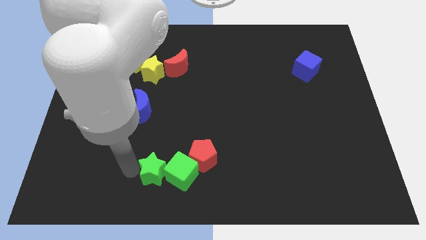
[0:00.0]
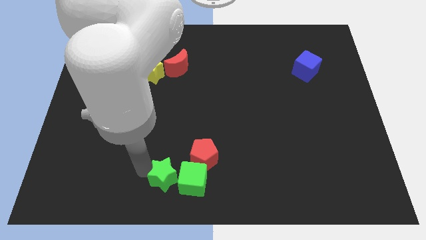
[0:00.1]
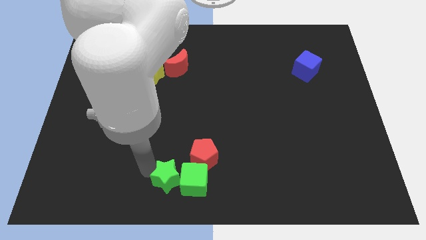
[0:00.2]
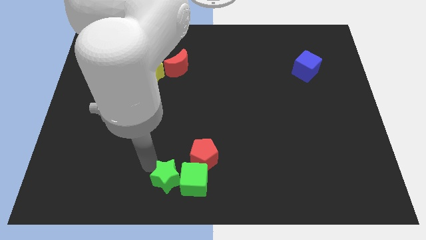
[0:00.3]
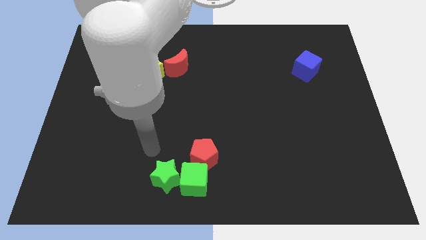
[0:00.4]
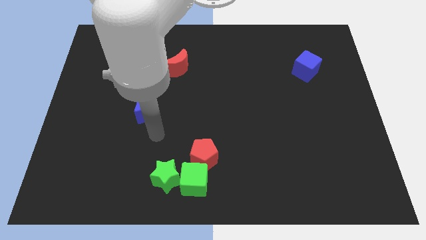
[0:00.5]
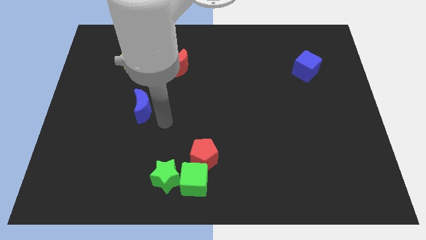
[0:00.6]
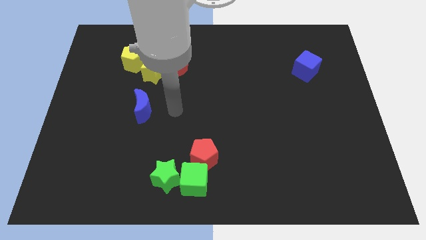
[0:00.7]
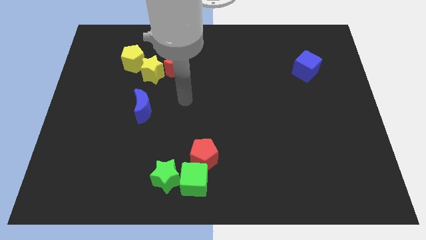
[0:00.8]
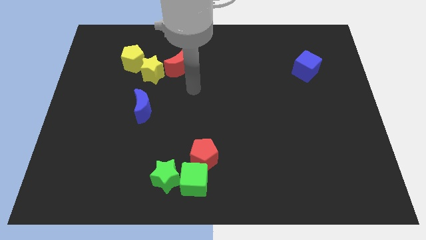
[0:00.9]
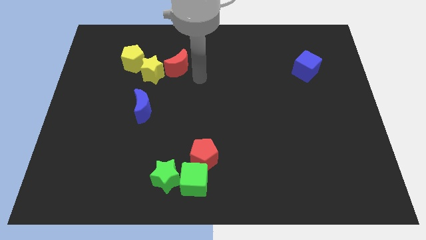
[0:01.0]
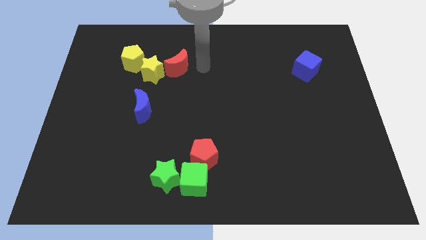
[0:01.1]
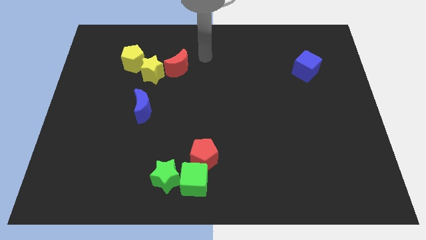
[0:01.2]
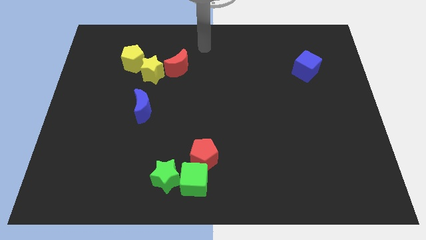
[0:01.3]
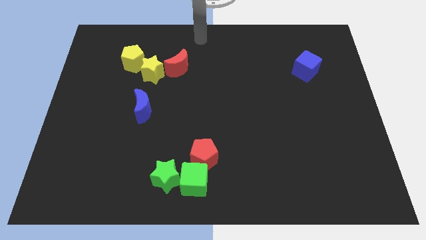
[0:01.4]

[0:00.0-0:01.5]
move the green blocks slightly to the right

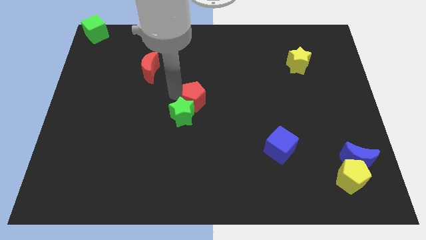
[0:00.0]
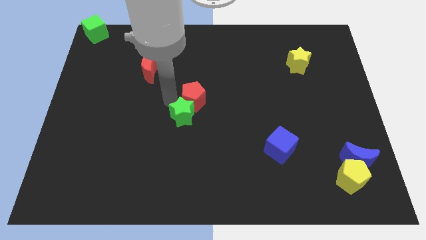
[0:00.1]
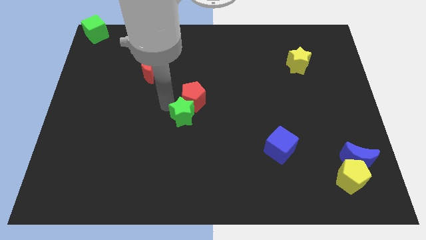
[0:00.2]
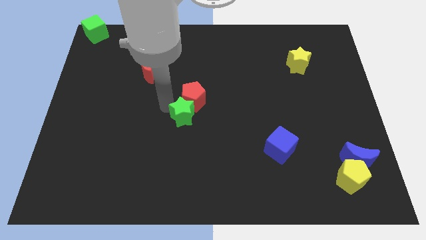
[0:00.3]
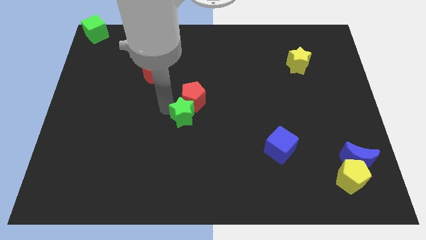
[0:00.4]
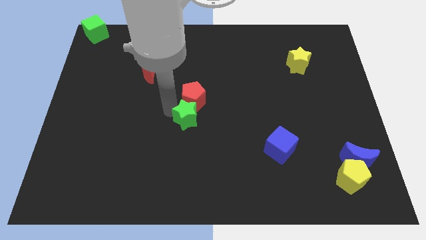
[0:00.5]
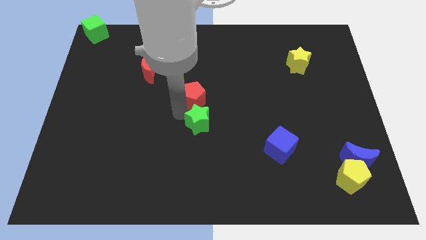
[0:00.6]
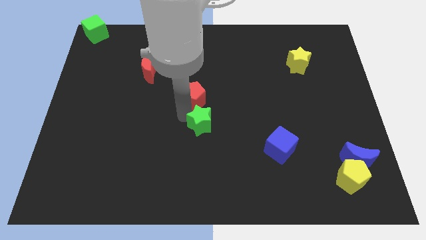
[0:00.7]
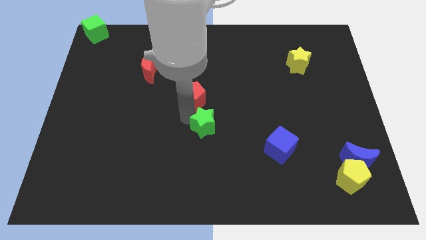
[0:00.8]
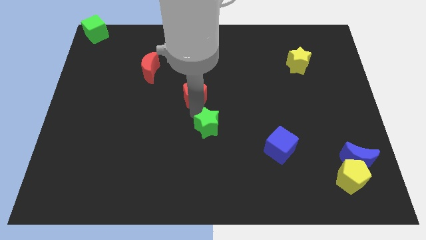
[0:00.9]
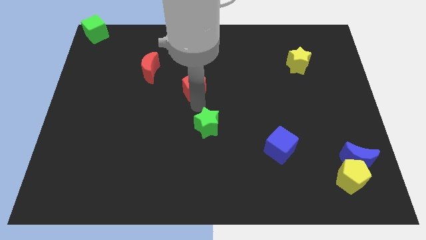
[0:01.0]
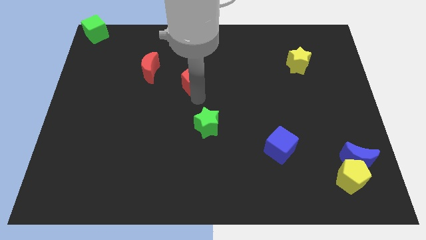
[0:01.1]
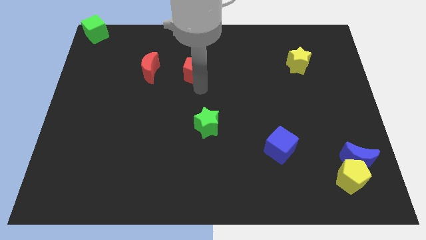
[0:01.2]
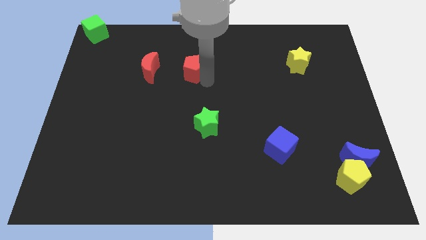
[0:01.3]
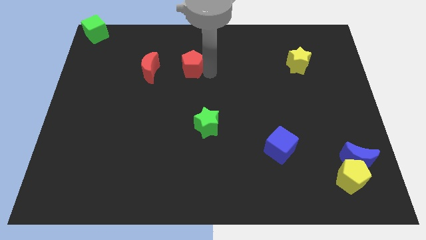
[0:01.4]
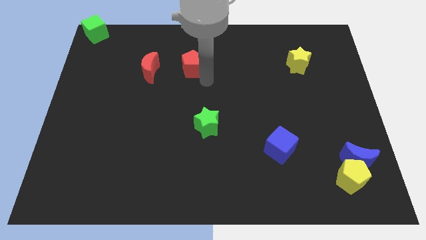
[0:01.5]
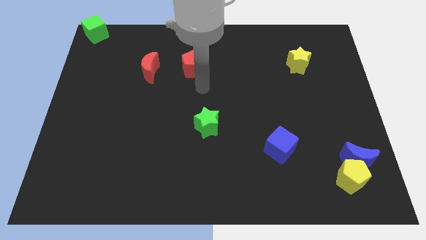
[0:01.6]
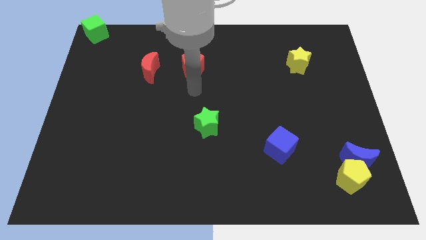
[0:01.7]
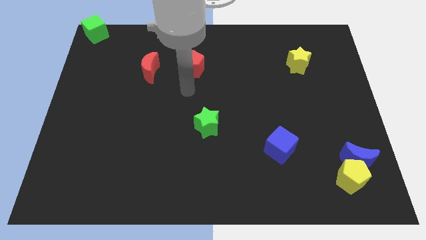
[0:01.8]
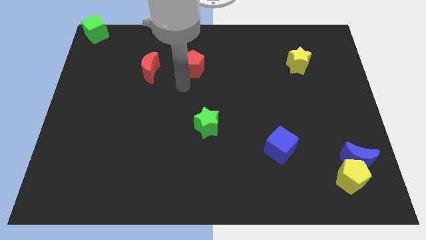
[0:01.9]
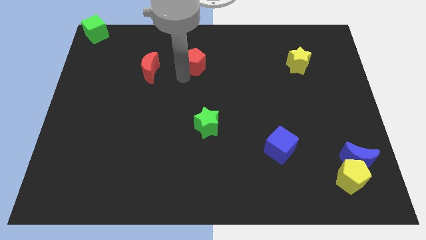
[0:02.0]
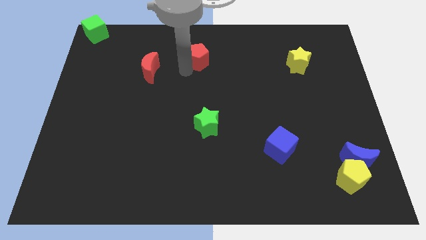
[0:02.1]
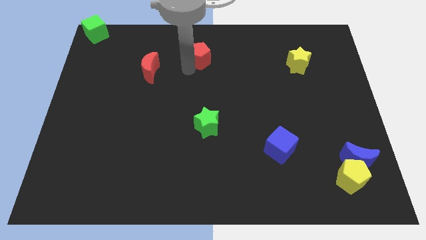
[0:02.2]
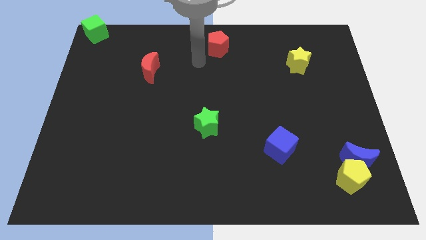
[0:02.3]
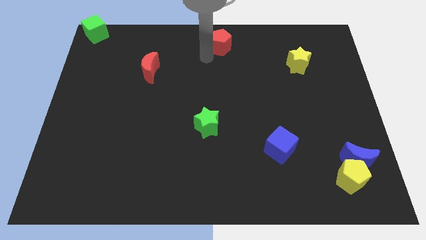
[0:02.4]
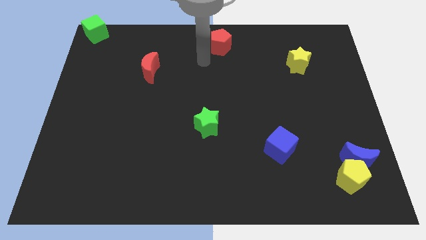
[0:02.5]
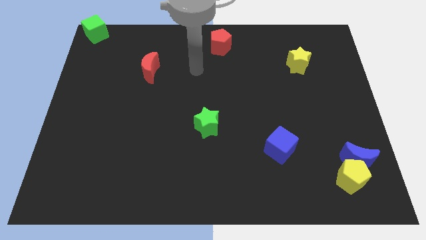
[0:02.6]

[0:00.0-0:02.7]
move red pentagon towards the top center of the board

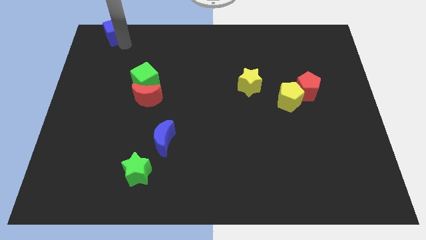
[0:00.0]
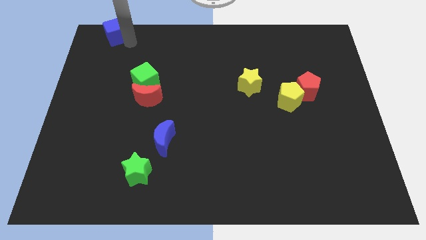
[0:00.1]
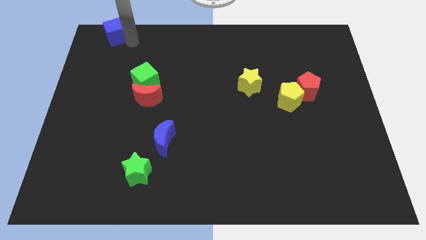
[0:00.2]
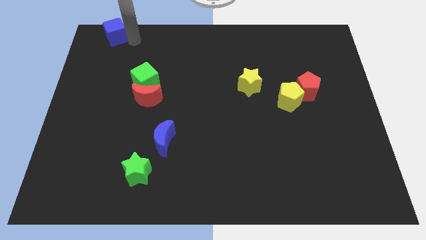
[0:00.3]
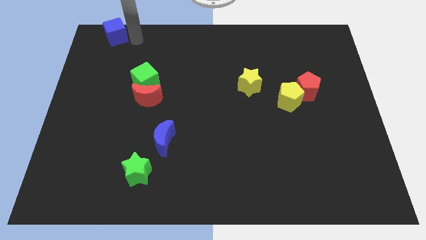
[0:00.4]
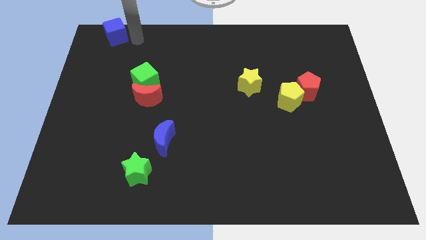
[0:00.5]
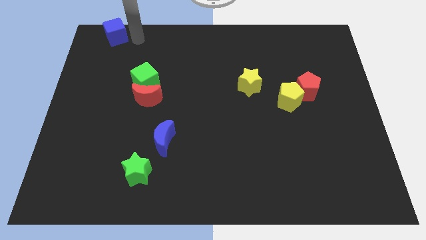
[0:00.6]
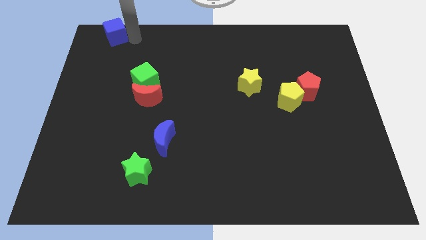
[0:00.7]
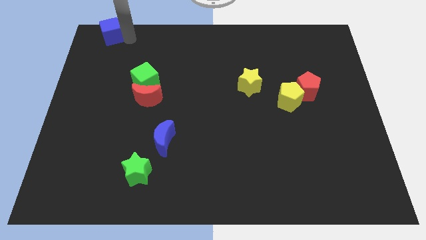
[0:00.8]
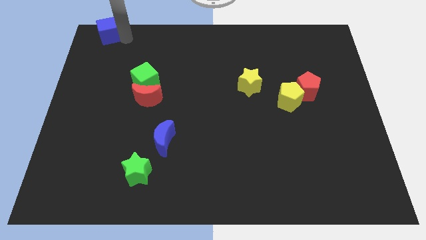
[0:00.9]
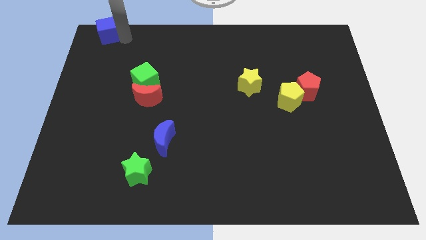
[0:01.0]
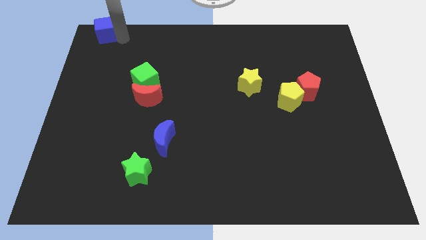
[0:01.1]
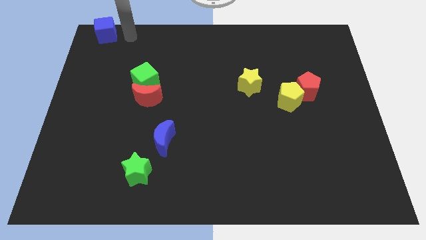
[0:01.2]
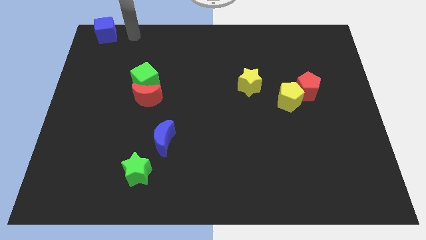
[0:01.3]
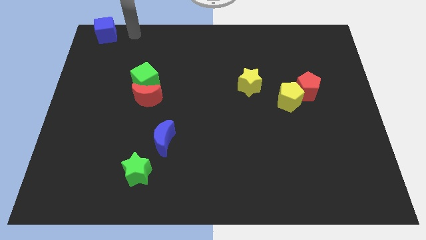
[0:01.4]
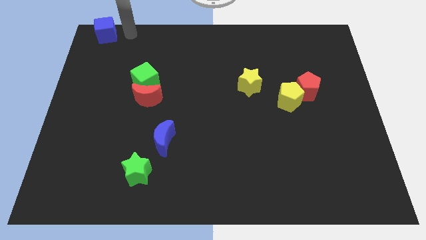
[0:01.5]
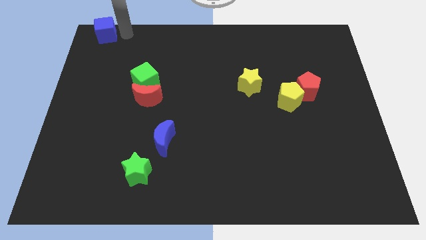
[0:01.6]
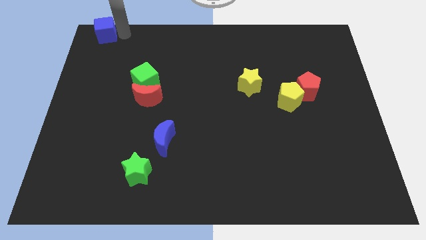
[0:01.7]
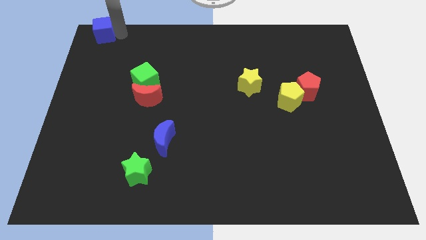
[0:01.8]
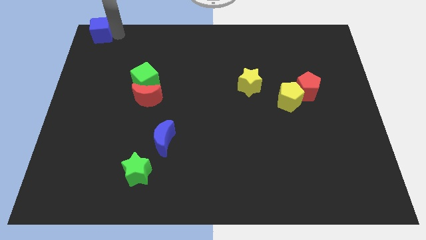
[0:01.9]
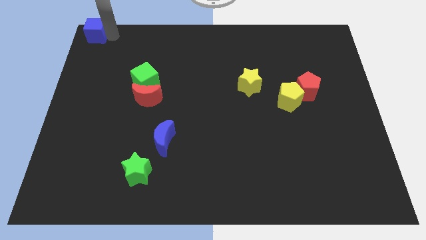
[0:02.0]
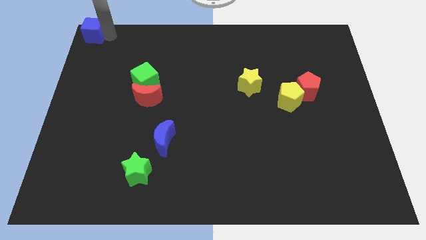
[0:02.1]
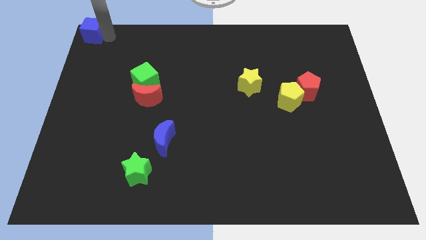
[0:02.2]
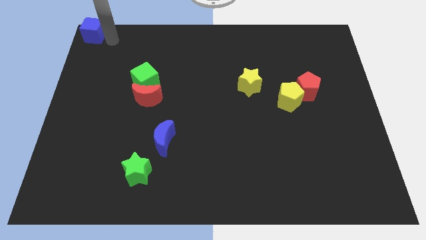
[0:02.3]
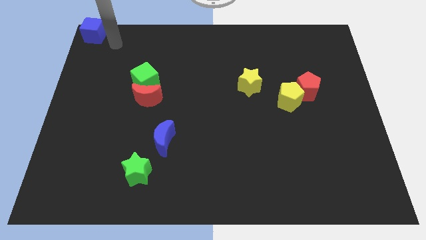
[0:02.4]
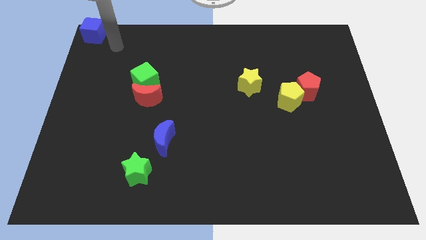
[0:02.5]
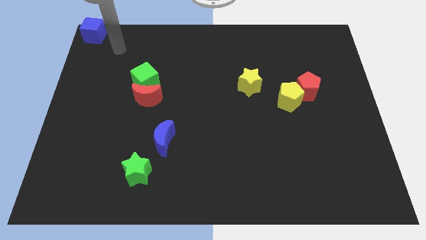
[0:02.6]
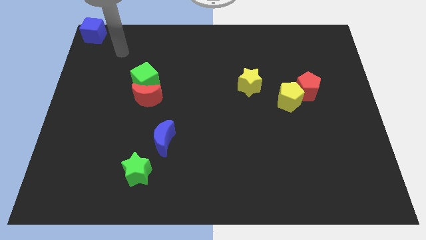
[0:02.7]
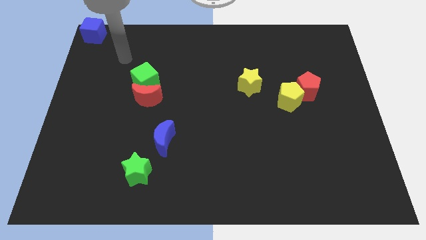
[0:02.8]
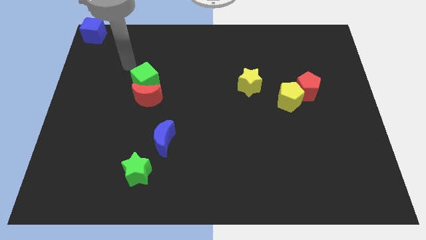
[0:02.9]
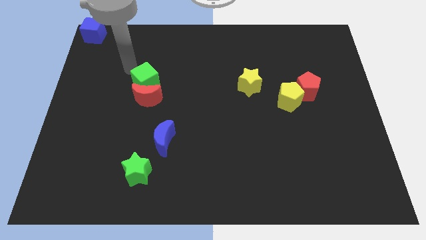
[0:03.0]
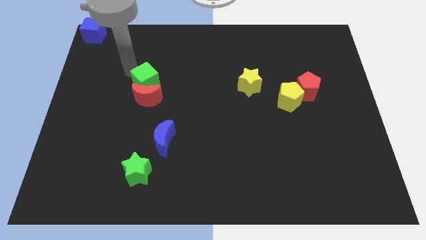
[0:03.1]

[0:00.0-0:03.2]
move the blue cube to the top left corner of the board

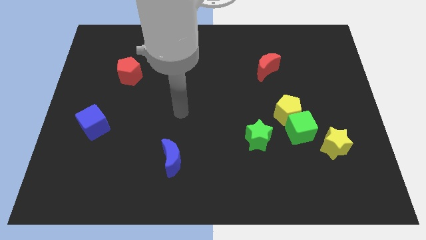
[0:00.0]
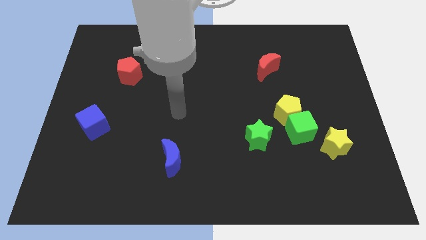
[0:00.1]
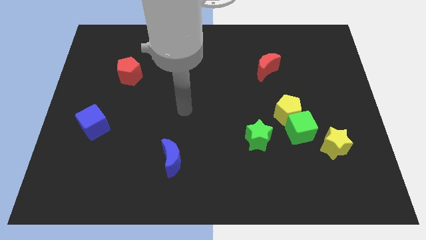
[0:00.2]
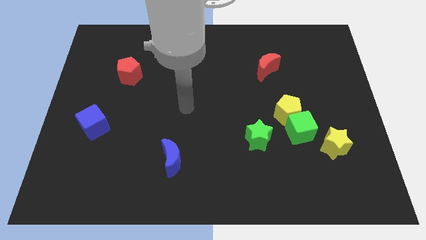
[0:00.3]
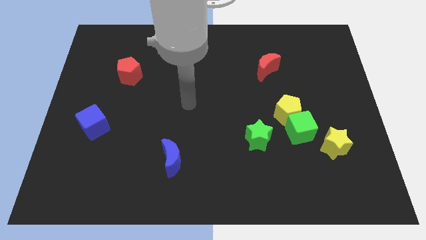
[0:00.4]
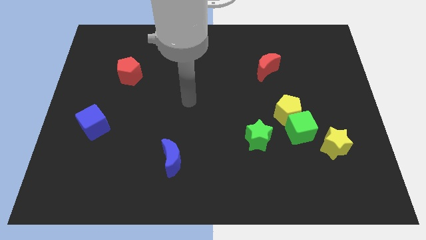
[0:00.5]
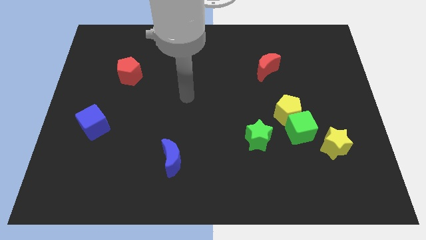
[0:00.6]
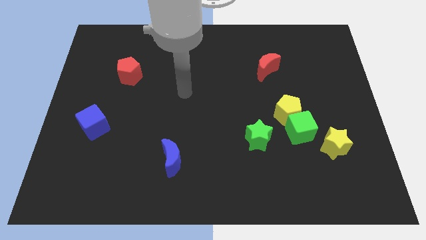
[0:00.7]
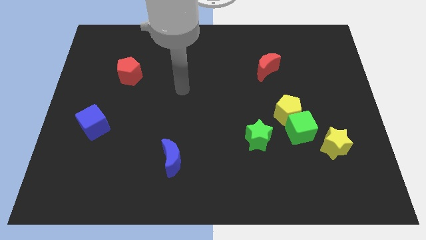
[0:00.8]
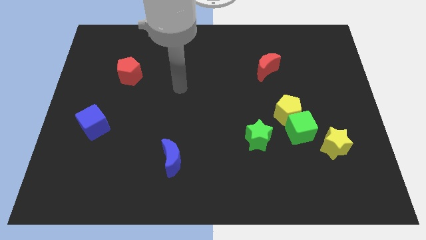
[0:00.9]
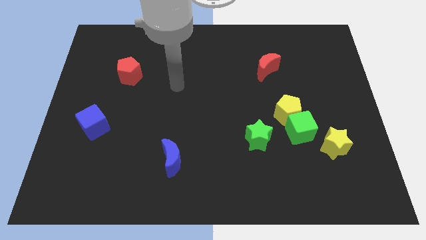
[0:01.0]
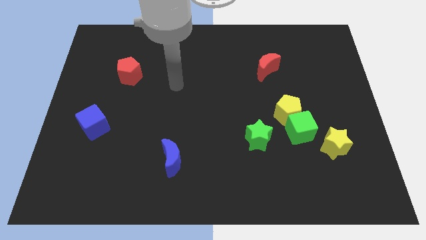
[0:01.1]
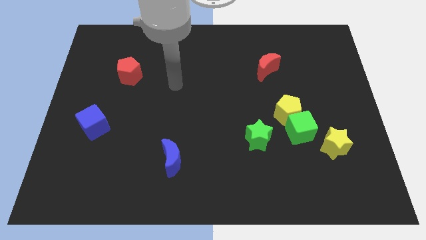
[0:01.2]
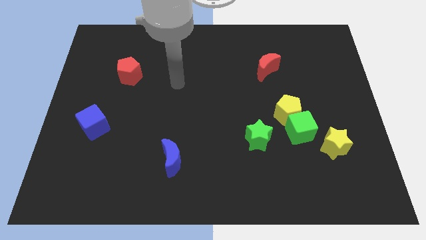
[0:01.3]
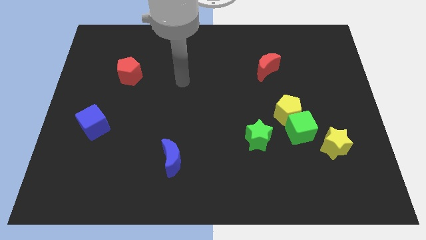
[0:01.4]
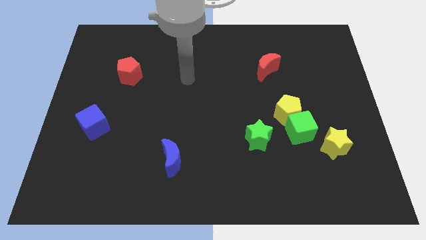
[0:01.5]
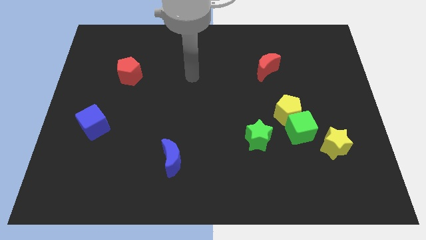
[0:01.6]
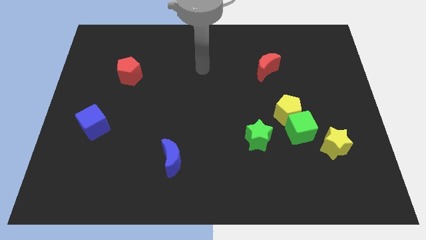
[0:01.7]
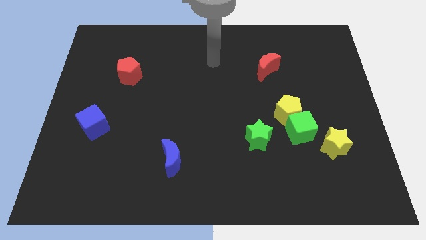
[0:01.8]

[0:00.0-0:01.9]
put your hand between the red blocks
